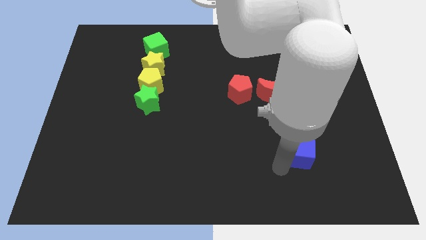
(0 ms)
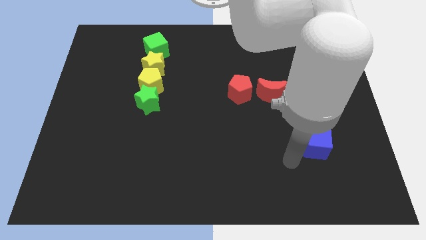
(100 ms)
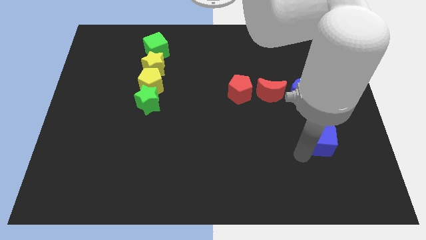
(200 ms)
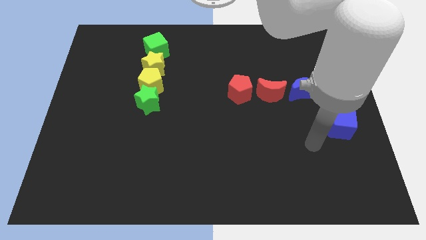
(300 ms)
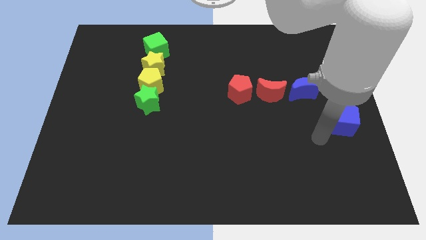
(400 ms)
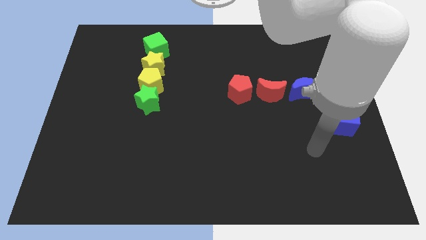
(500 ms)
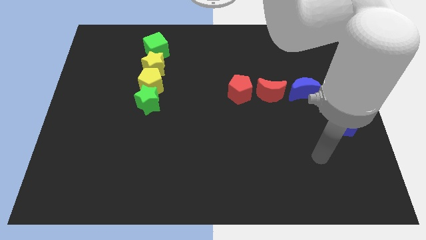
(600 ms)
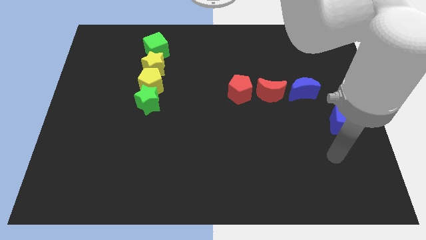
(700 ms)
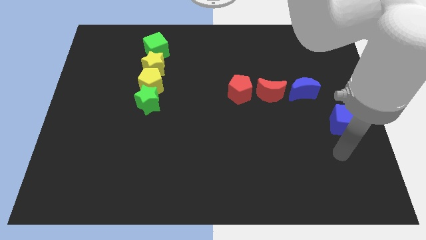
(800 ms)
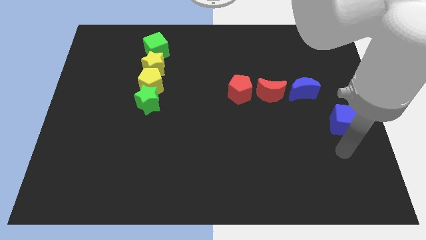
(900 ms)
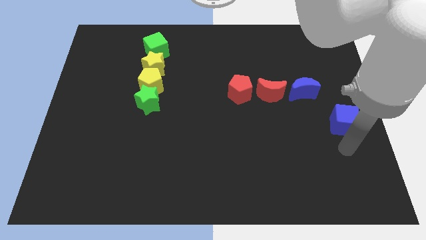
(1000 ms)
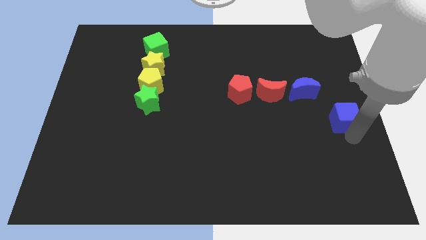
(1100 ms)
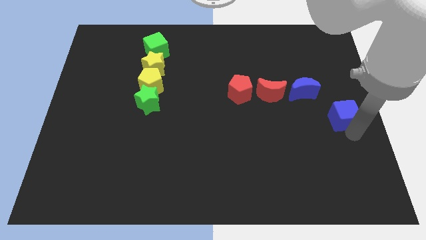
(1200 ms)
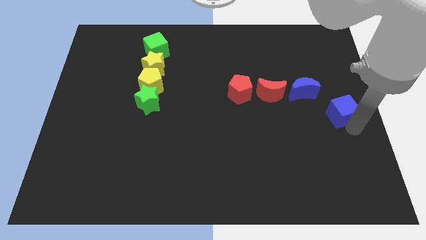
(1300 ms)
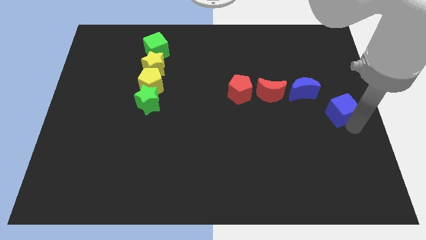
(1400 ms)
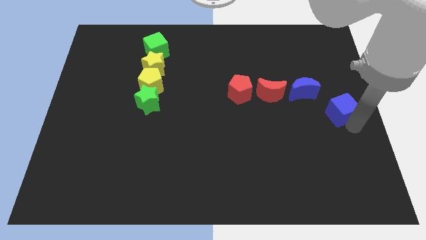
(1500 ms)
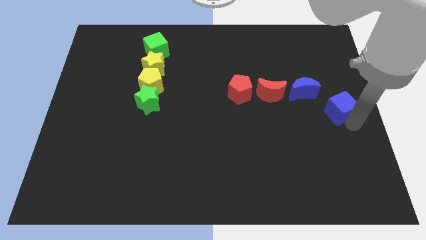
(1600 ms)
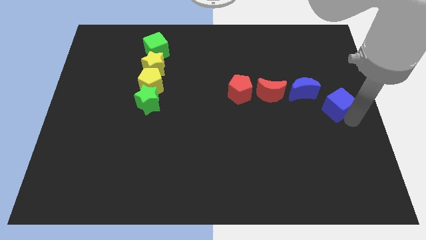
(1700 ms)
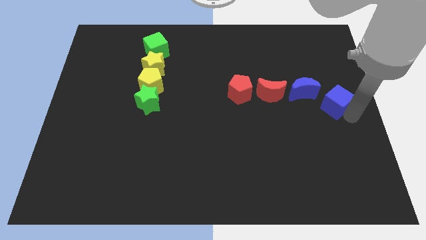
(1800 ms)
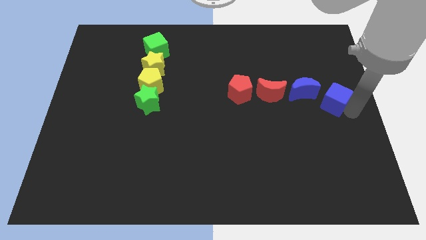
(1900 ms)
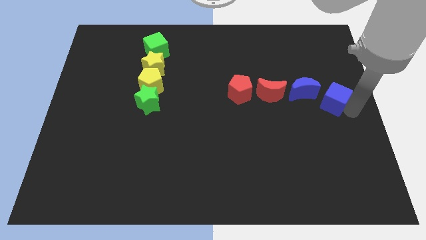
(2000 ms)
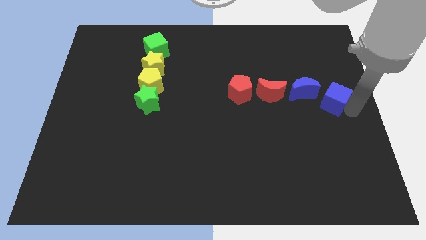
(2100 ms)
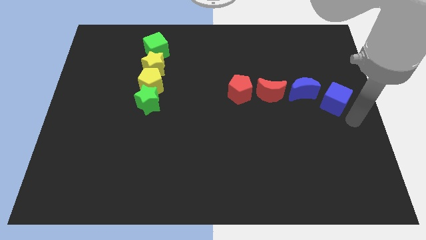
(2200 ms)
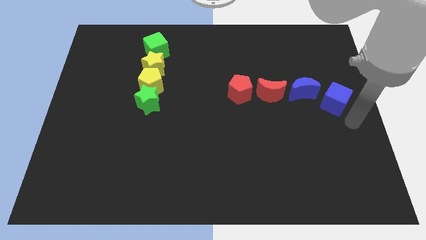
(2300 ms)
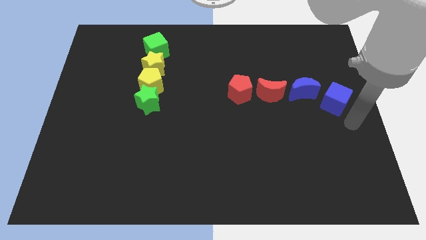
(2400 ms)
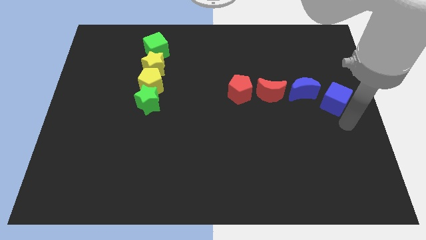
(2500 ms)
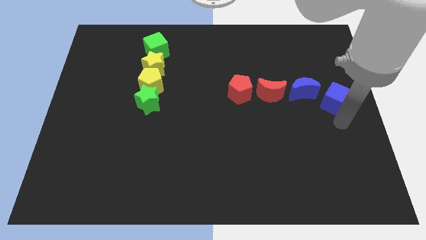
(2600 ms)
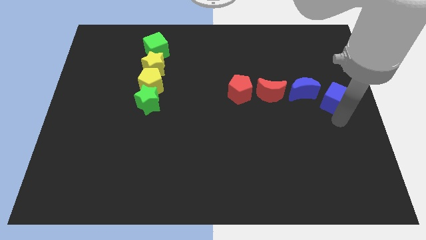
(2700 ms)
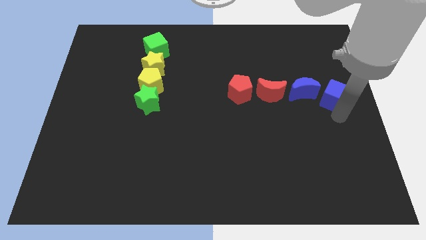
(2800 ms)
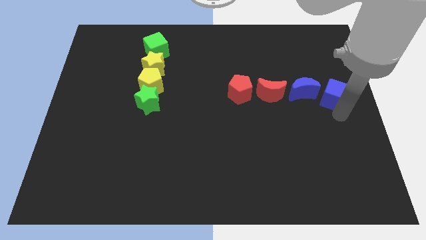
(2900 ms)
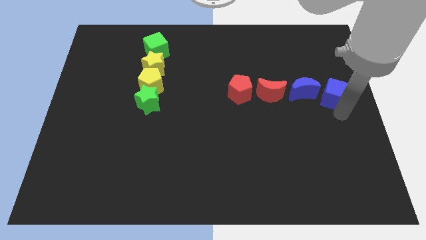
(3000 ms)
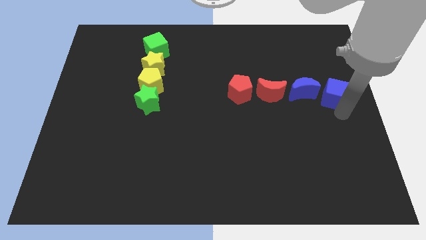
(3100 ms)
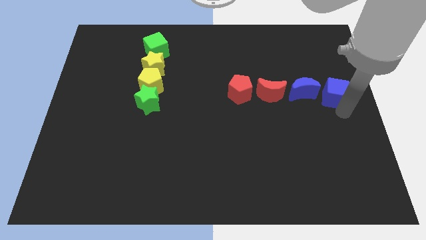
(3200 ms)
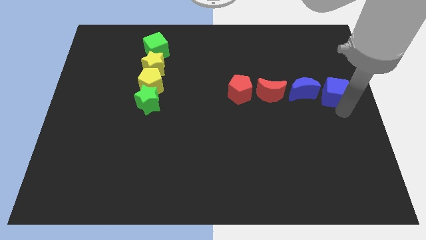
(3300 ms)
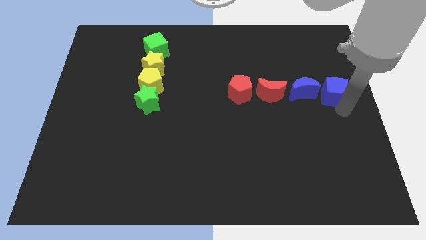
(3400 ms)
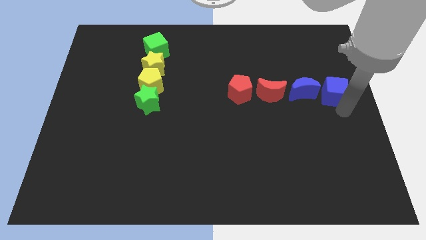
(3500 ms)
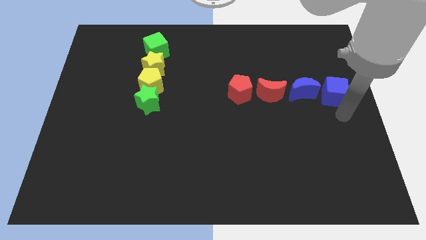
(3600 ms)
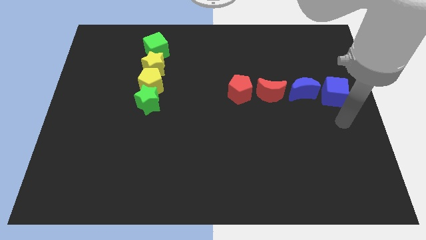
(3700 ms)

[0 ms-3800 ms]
move the blue cube to the right side of the horizontal line of blocks

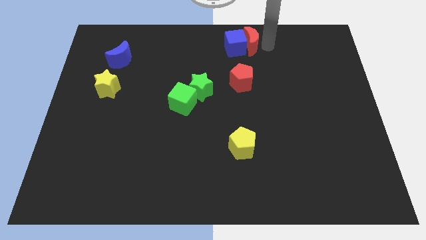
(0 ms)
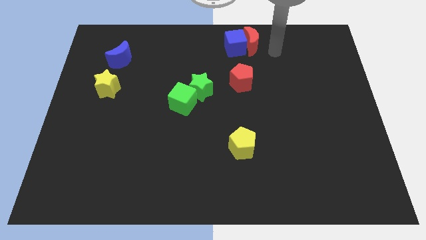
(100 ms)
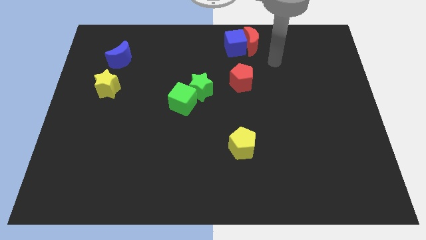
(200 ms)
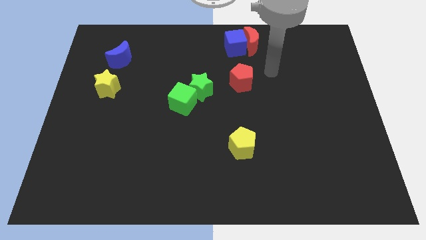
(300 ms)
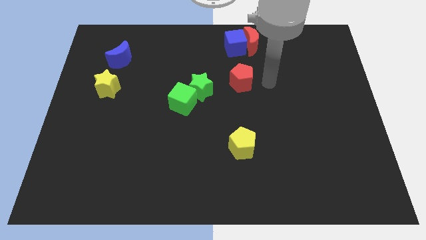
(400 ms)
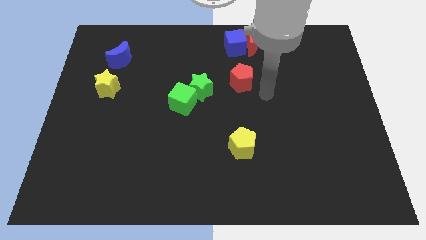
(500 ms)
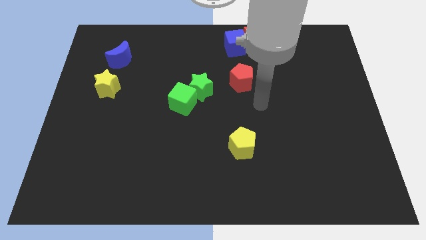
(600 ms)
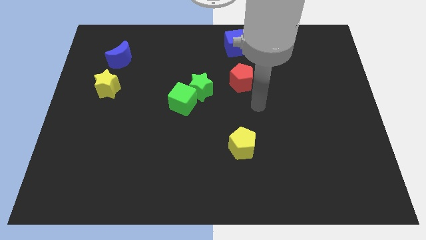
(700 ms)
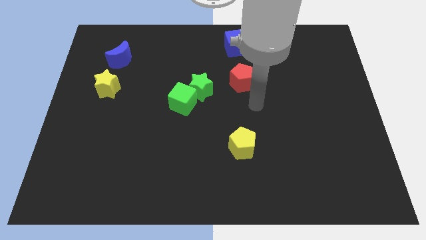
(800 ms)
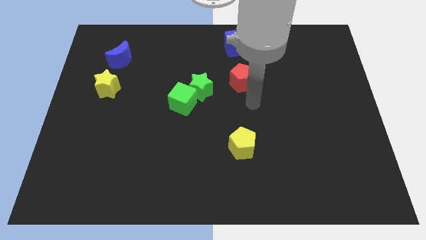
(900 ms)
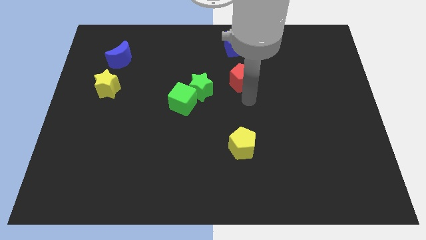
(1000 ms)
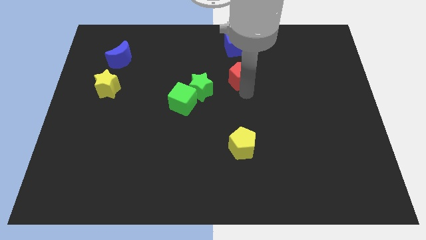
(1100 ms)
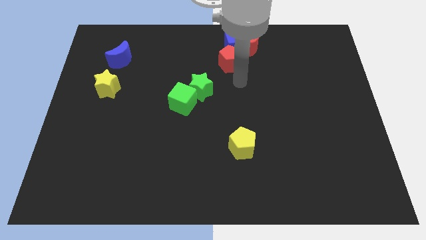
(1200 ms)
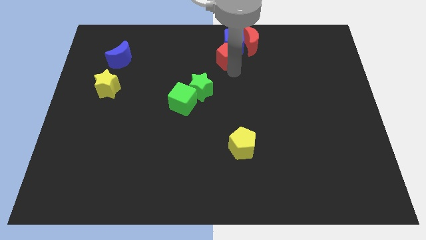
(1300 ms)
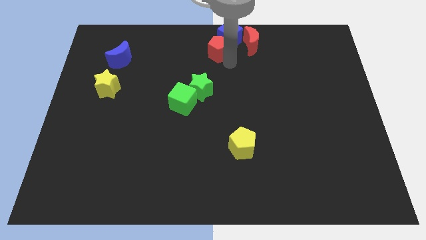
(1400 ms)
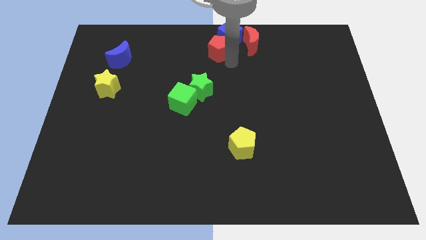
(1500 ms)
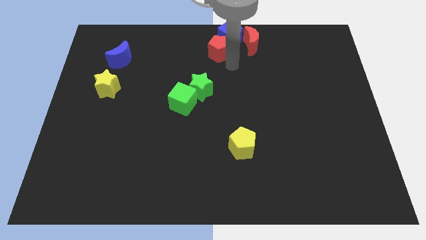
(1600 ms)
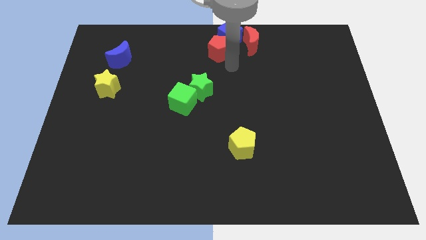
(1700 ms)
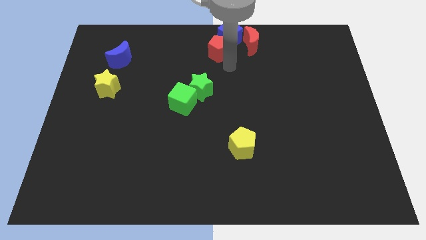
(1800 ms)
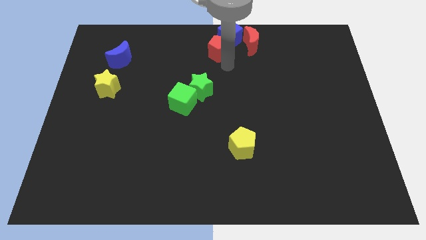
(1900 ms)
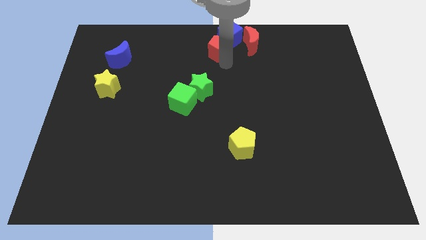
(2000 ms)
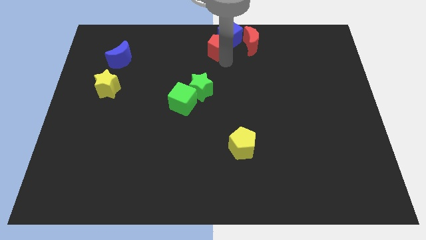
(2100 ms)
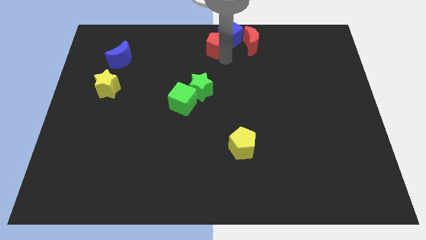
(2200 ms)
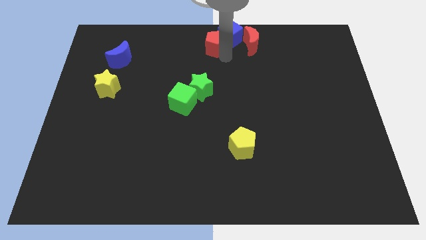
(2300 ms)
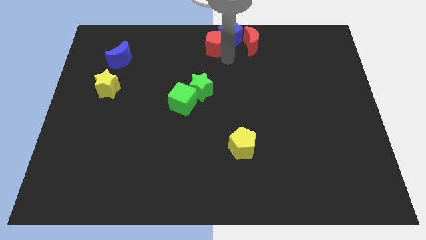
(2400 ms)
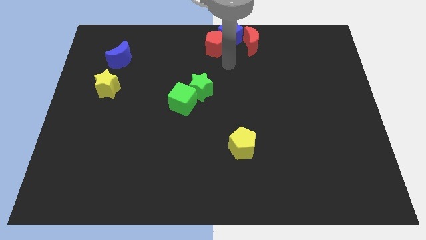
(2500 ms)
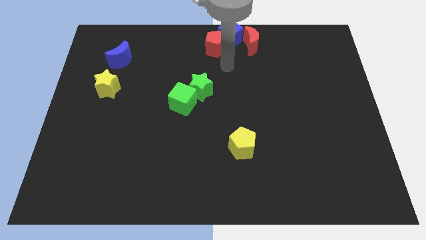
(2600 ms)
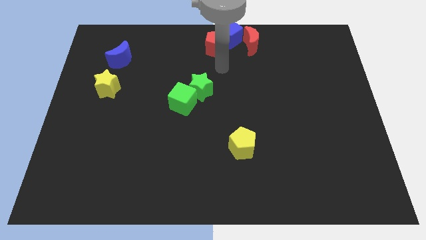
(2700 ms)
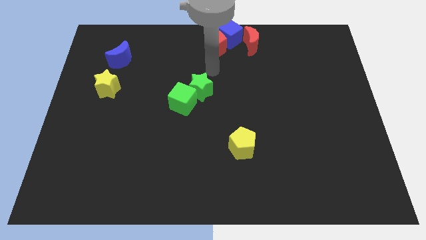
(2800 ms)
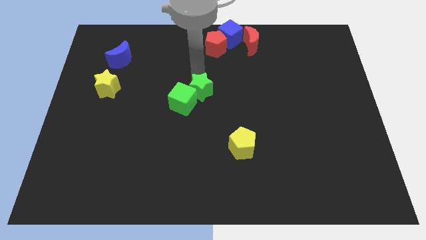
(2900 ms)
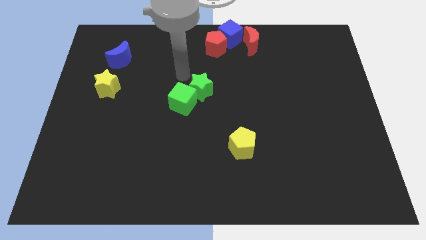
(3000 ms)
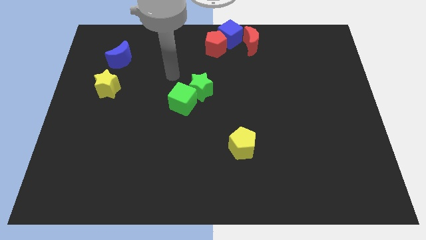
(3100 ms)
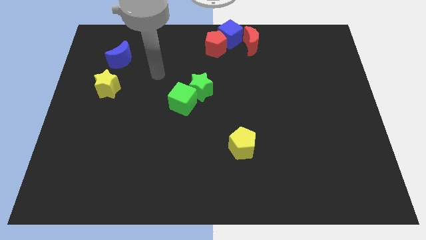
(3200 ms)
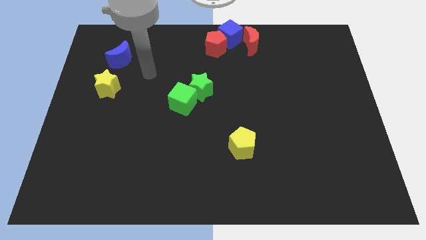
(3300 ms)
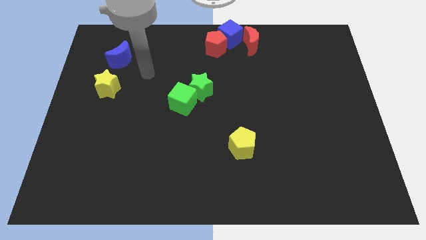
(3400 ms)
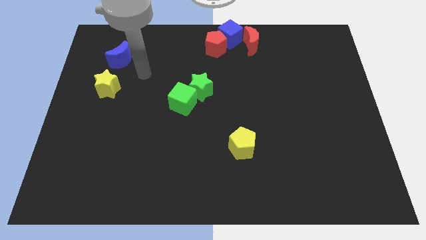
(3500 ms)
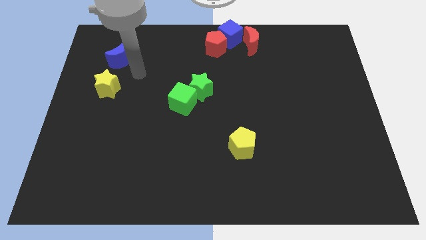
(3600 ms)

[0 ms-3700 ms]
push the red pentagon towards the blue cube

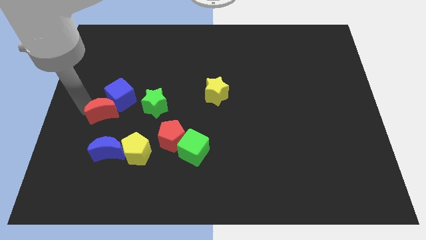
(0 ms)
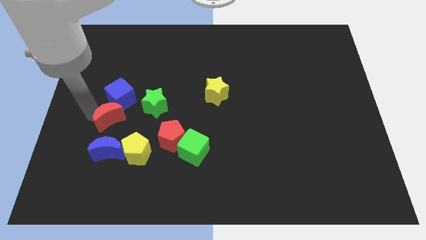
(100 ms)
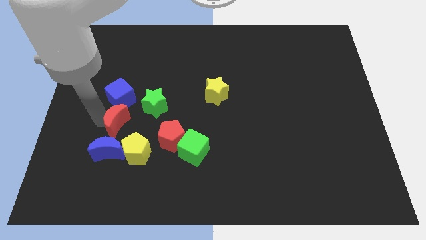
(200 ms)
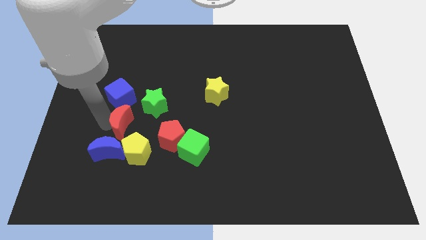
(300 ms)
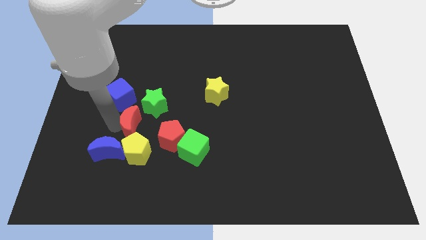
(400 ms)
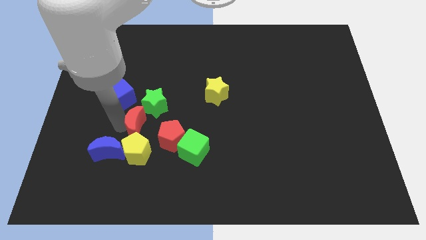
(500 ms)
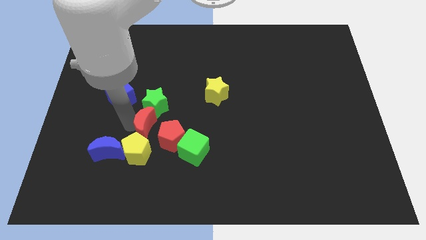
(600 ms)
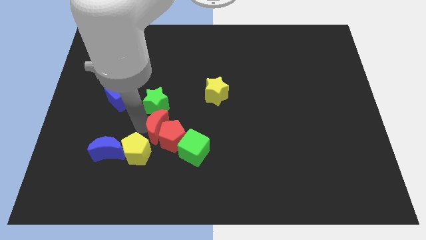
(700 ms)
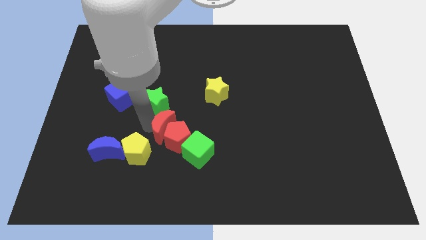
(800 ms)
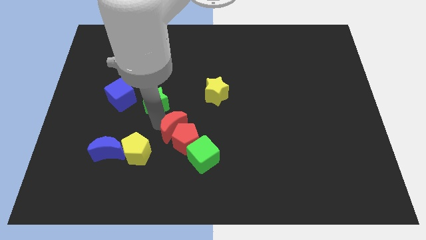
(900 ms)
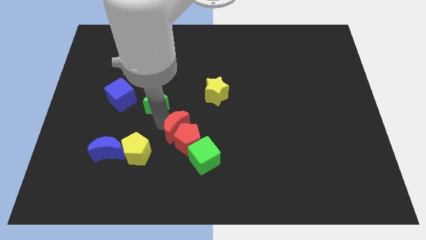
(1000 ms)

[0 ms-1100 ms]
move red moon diagonally above the red pentagon

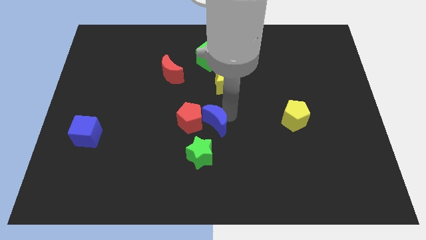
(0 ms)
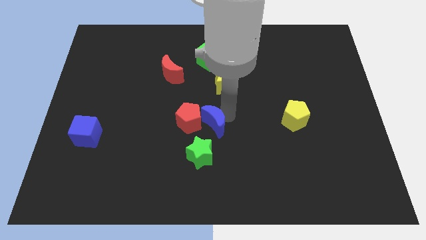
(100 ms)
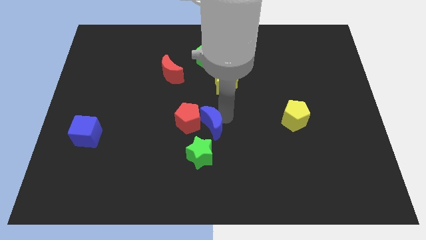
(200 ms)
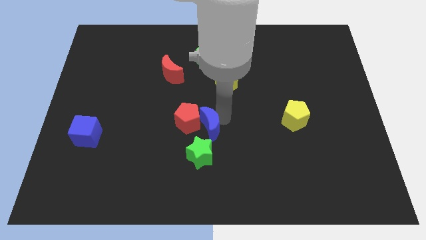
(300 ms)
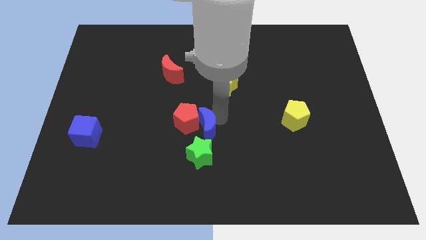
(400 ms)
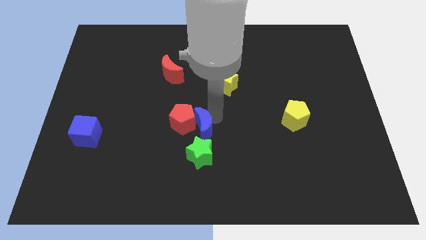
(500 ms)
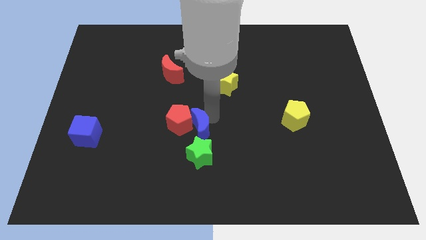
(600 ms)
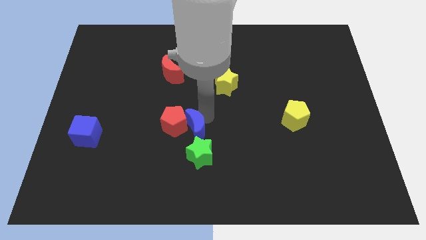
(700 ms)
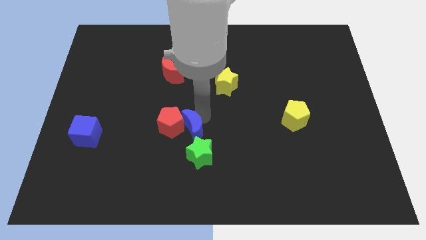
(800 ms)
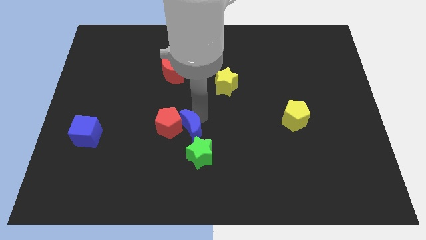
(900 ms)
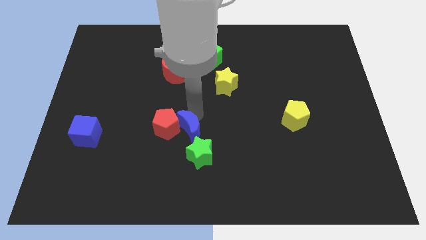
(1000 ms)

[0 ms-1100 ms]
push the blue crescent and the red pentagon slightly to the left side
